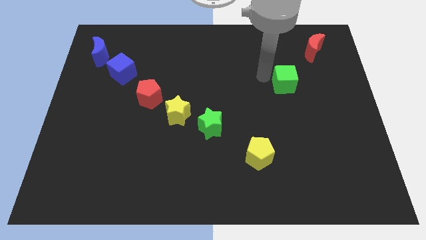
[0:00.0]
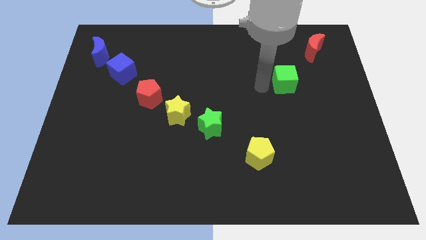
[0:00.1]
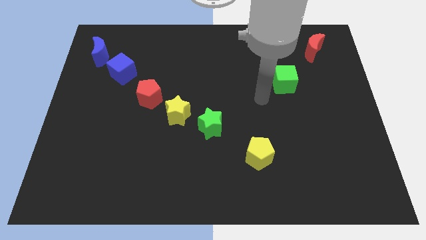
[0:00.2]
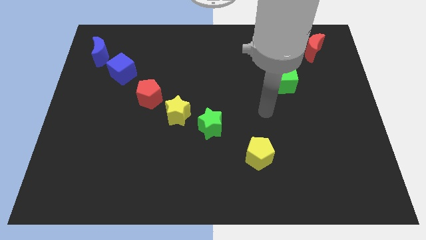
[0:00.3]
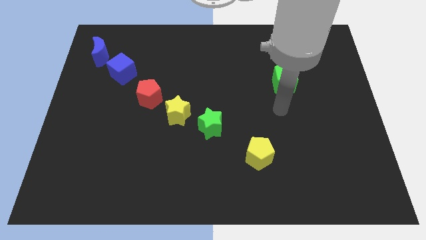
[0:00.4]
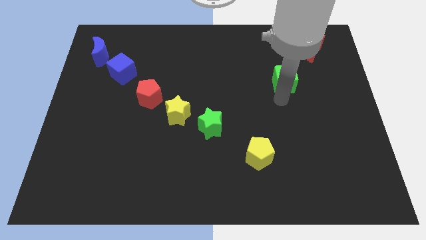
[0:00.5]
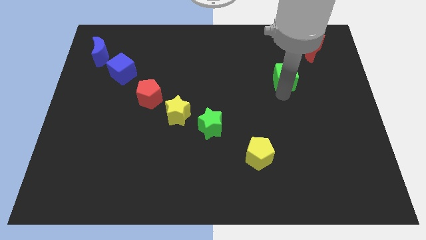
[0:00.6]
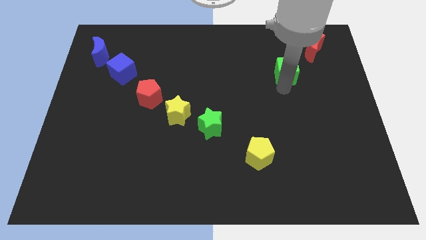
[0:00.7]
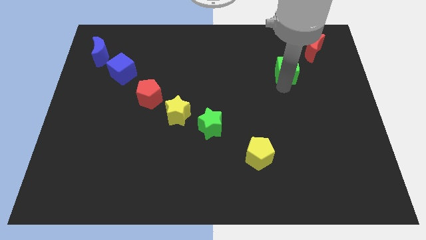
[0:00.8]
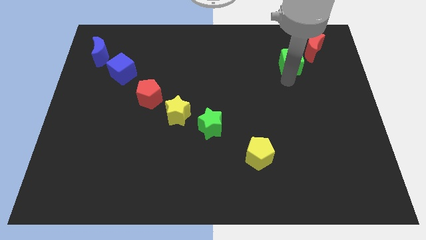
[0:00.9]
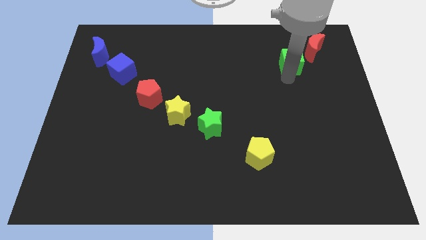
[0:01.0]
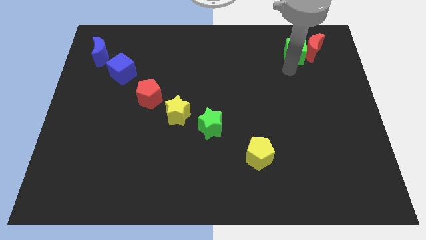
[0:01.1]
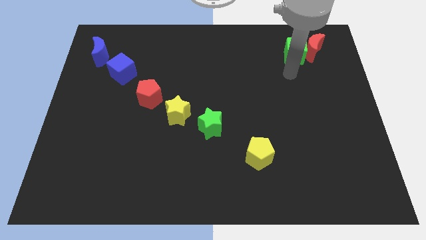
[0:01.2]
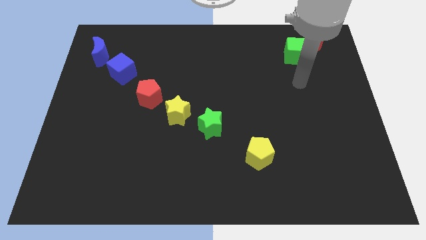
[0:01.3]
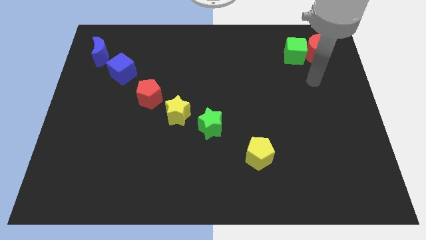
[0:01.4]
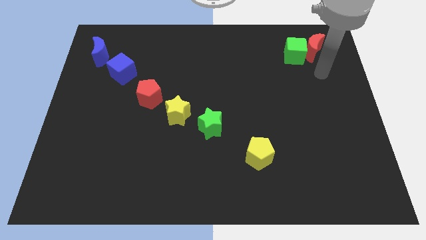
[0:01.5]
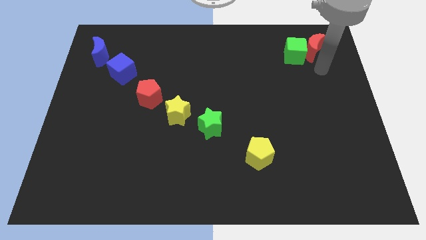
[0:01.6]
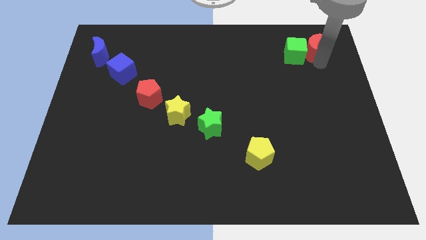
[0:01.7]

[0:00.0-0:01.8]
push the green cube into red crescent

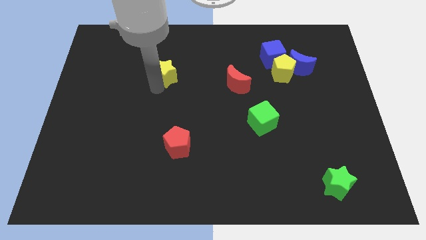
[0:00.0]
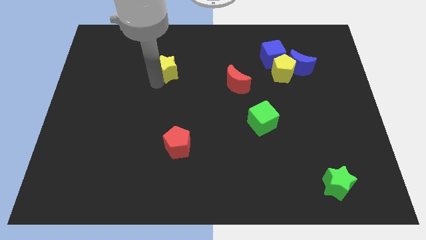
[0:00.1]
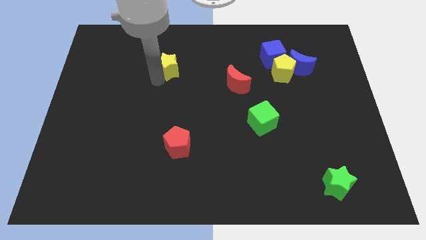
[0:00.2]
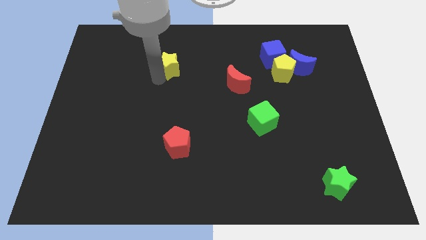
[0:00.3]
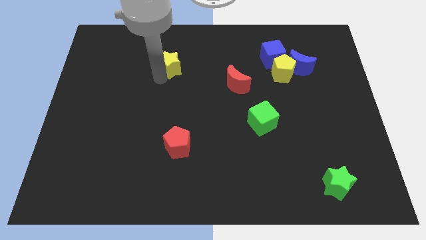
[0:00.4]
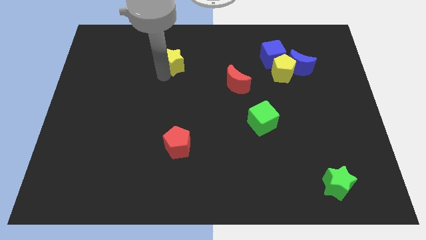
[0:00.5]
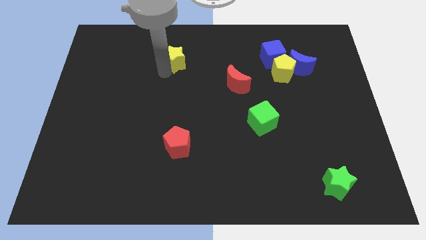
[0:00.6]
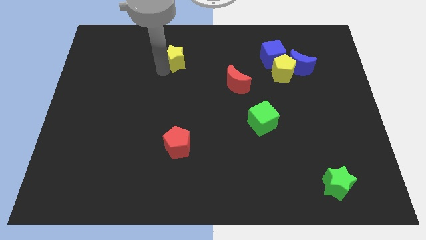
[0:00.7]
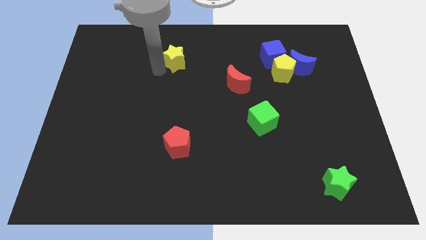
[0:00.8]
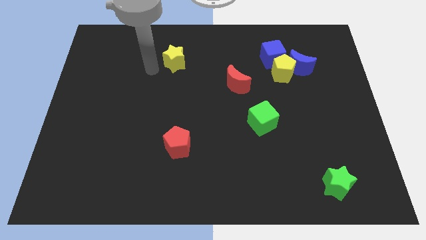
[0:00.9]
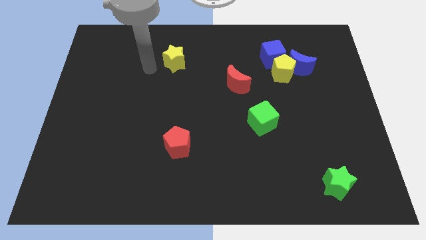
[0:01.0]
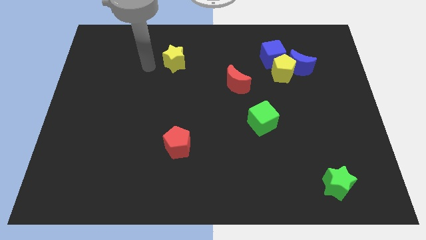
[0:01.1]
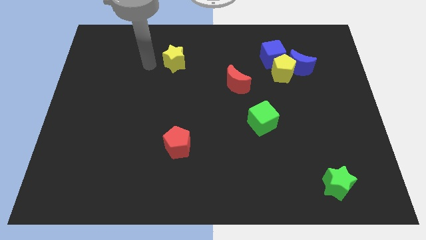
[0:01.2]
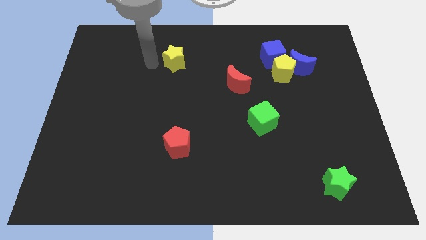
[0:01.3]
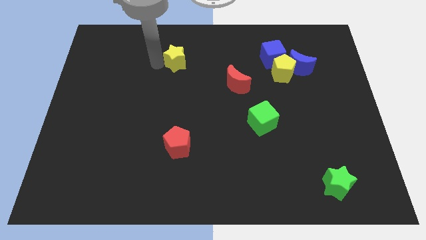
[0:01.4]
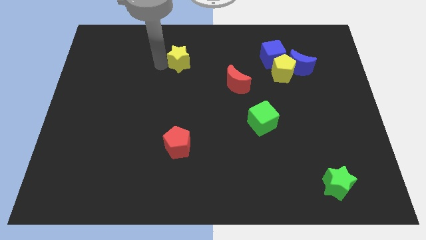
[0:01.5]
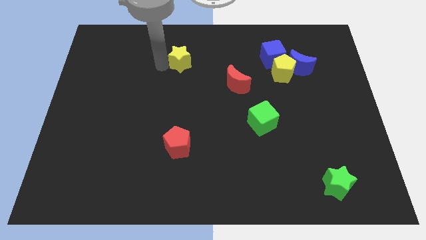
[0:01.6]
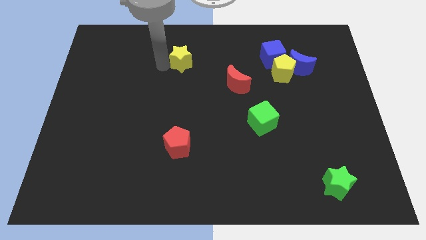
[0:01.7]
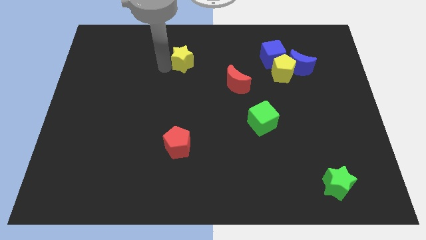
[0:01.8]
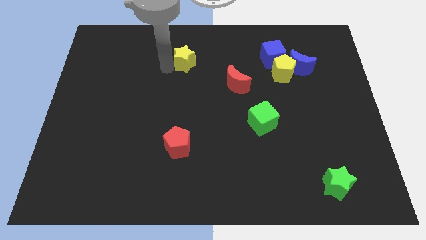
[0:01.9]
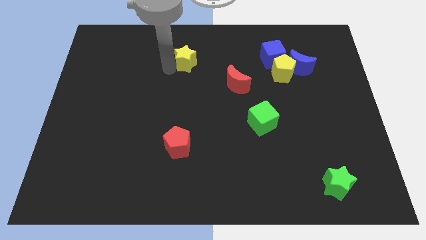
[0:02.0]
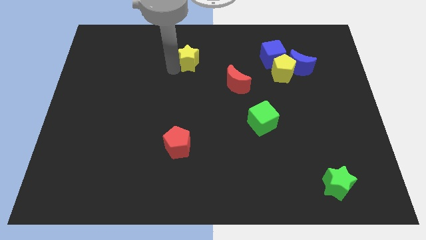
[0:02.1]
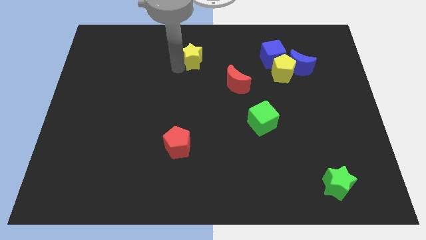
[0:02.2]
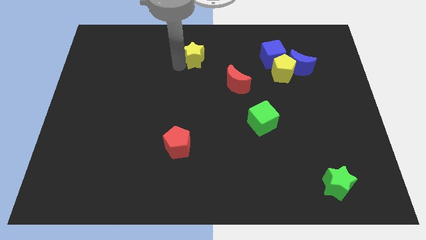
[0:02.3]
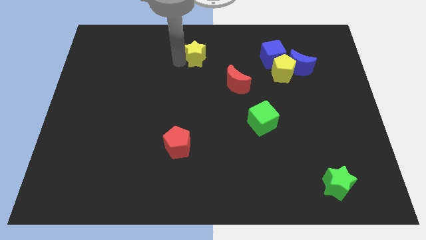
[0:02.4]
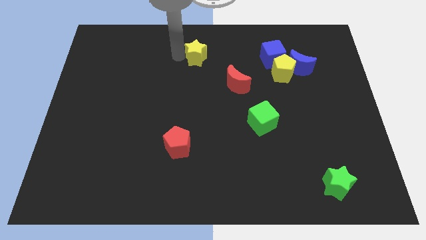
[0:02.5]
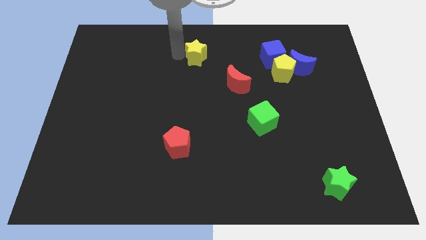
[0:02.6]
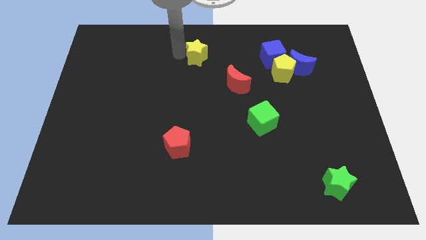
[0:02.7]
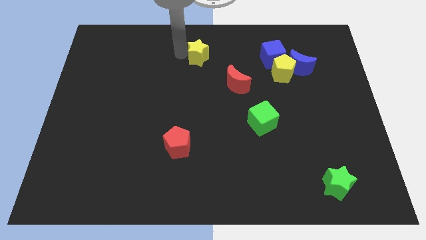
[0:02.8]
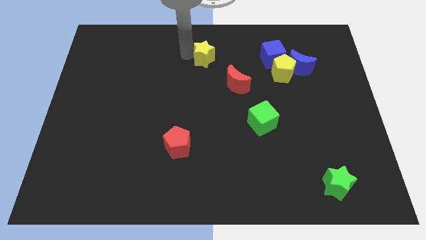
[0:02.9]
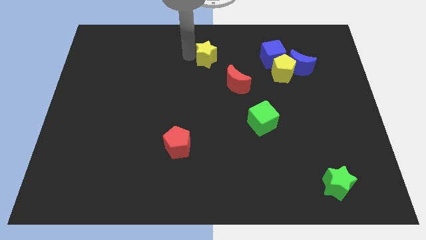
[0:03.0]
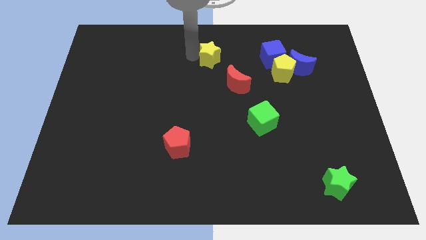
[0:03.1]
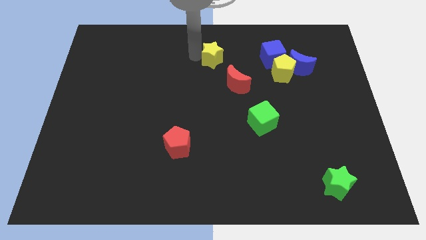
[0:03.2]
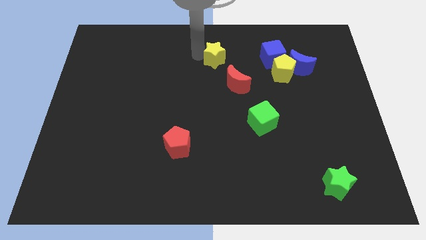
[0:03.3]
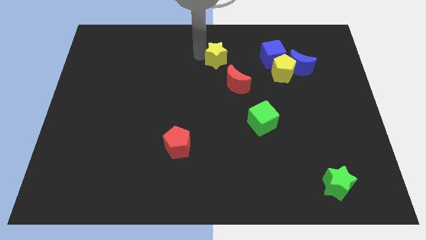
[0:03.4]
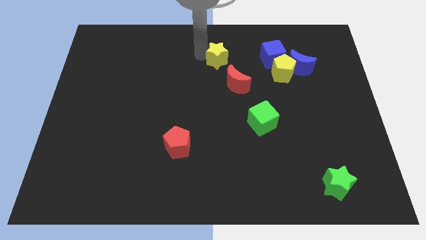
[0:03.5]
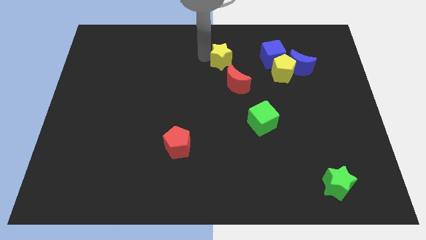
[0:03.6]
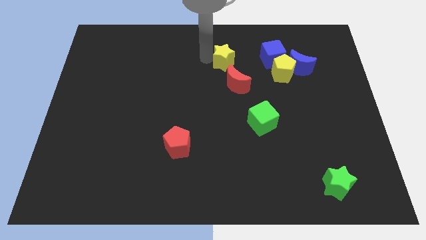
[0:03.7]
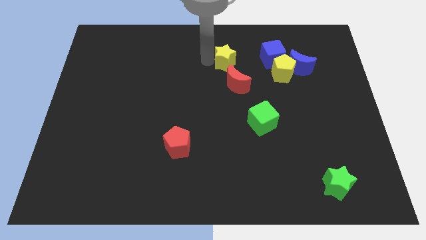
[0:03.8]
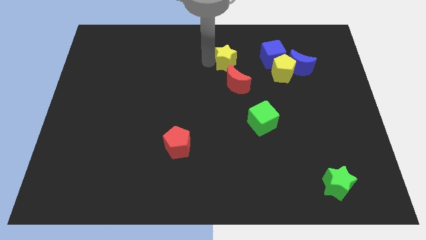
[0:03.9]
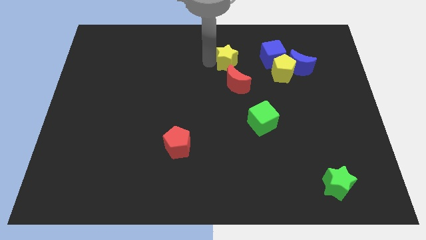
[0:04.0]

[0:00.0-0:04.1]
put the yellow star diagonally top right to the red pentagon

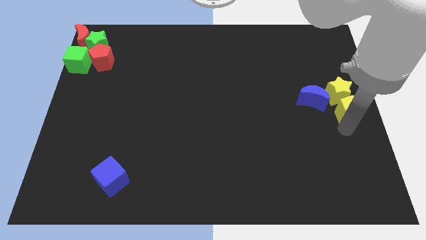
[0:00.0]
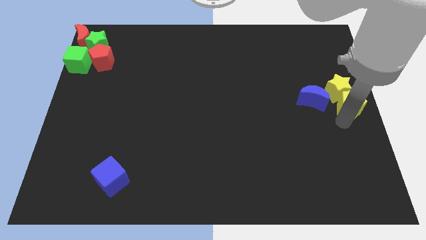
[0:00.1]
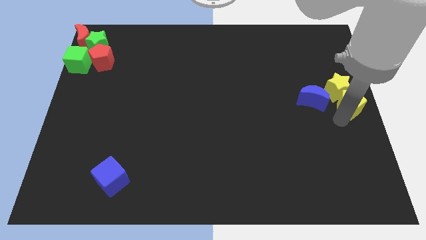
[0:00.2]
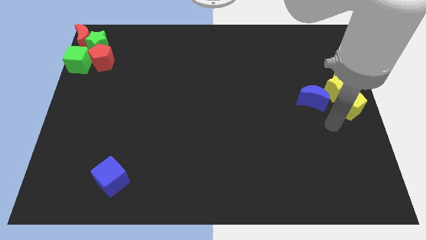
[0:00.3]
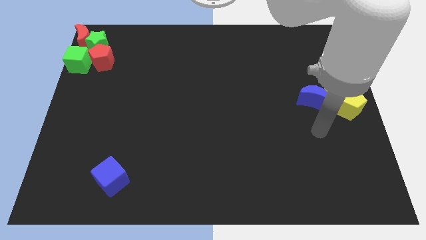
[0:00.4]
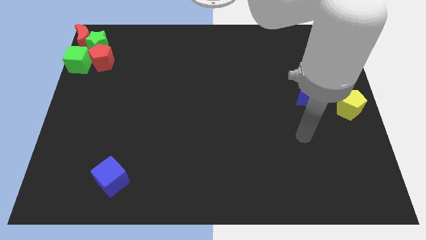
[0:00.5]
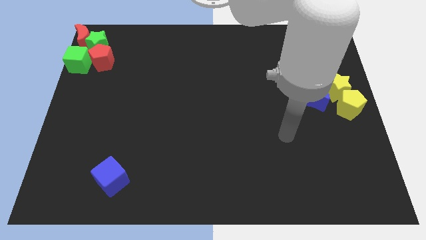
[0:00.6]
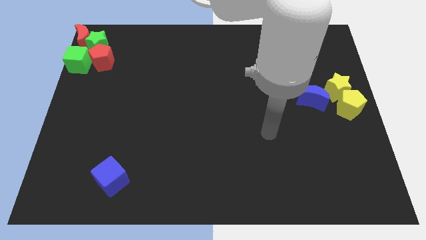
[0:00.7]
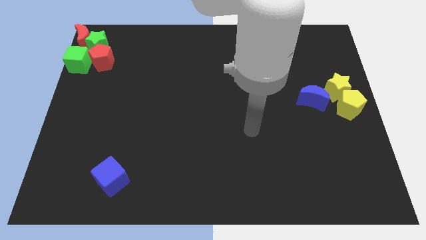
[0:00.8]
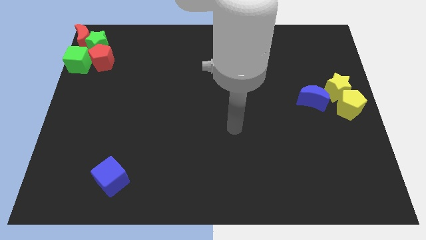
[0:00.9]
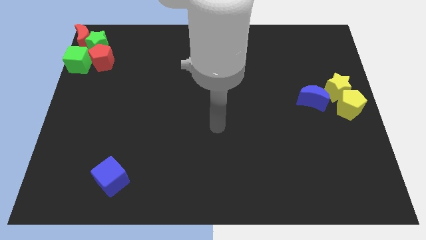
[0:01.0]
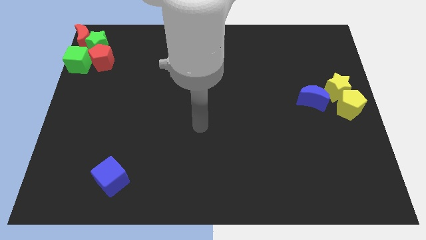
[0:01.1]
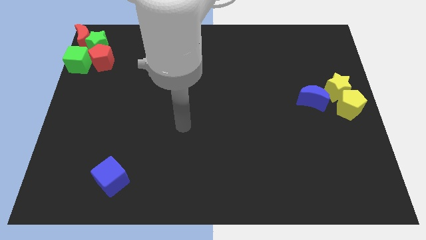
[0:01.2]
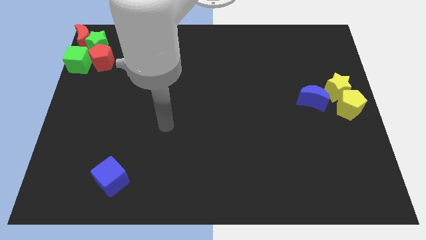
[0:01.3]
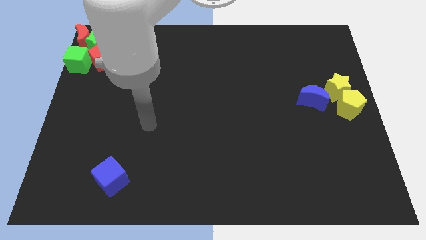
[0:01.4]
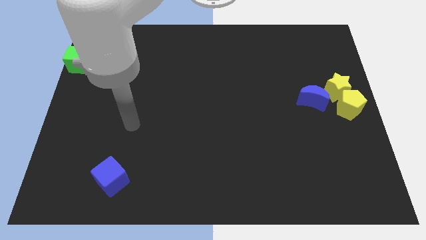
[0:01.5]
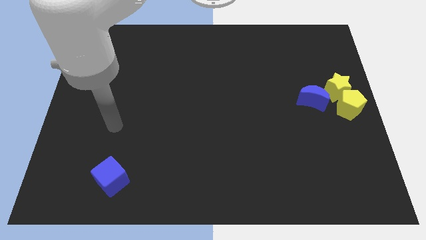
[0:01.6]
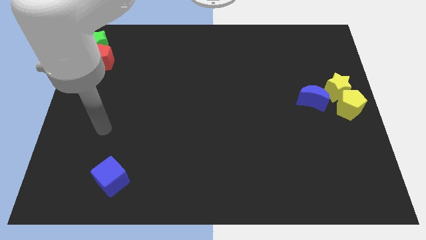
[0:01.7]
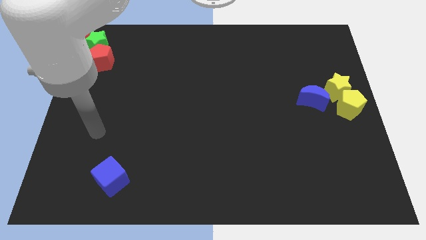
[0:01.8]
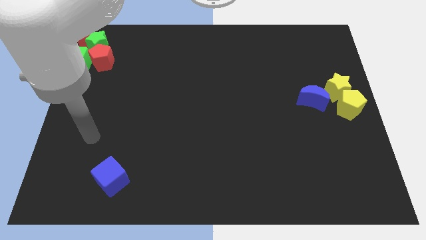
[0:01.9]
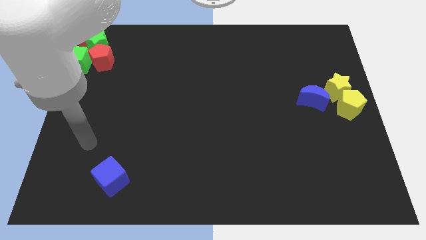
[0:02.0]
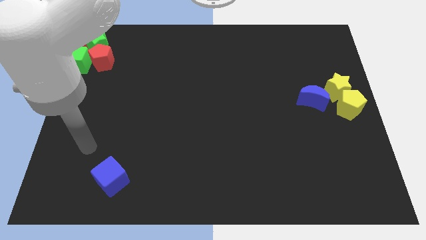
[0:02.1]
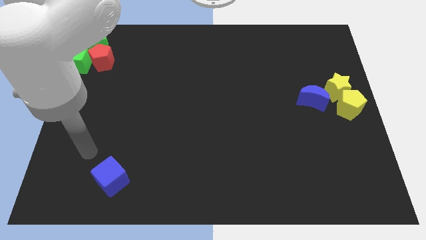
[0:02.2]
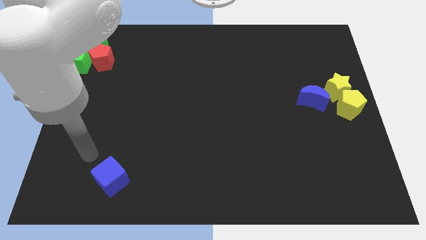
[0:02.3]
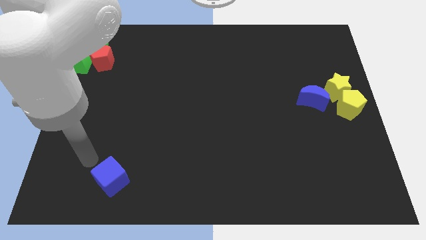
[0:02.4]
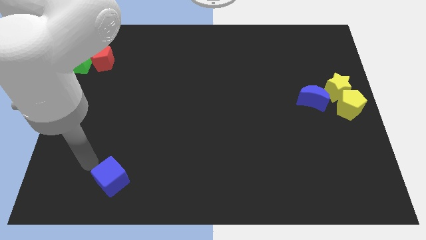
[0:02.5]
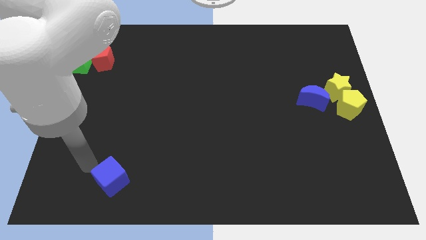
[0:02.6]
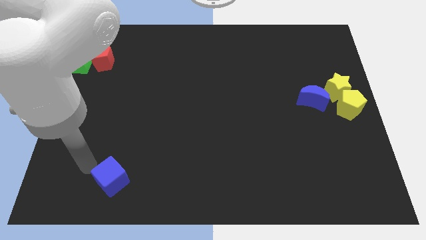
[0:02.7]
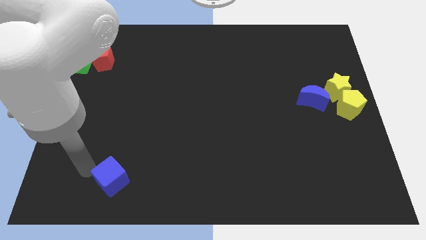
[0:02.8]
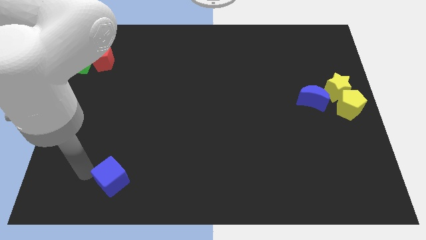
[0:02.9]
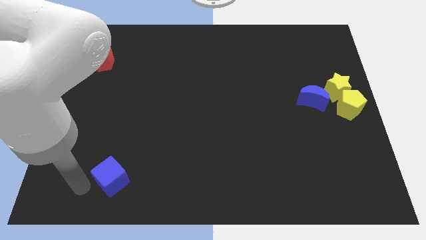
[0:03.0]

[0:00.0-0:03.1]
move your arm left to the blue cube

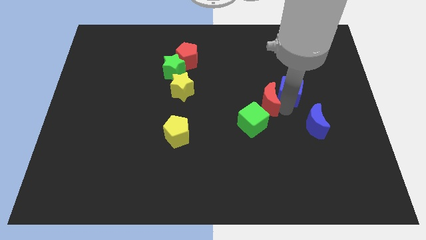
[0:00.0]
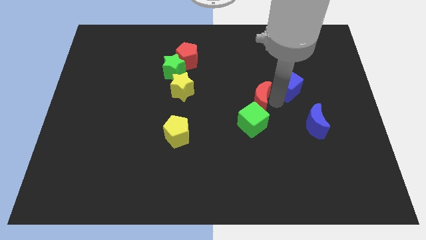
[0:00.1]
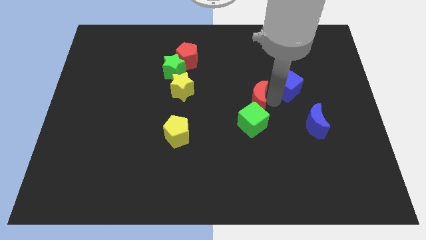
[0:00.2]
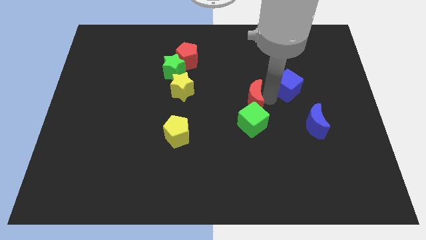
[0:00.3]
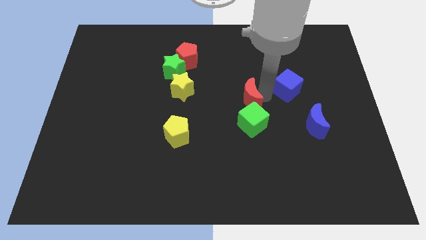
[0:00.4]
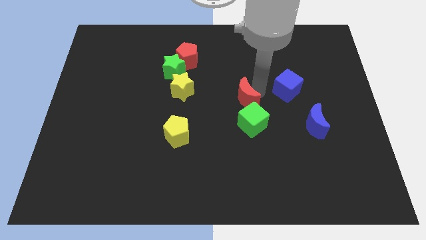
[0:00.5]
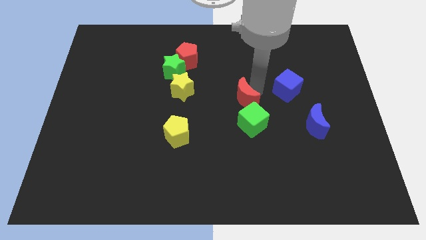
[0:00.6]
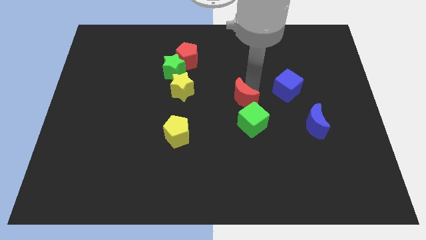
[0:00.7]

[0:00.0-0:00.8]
place the red crescent above the green cube
